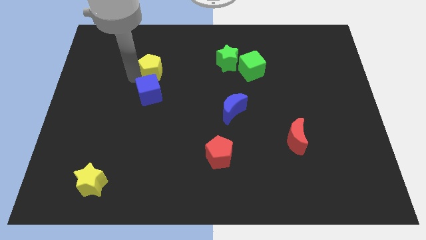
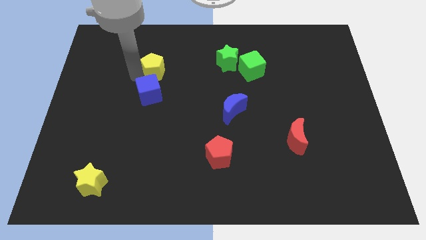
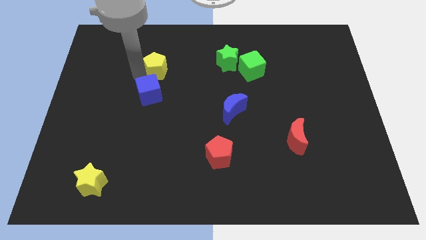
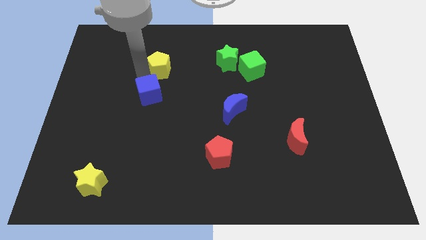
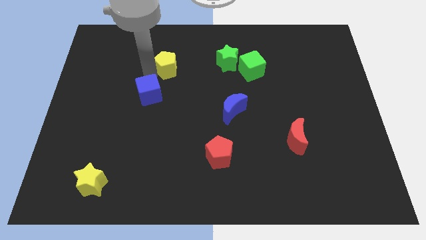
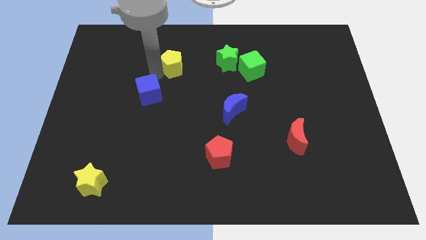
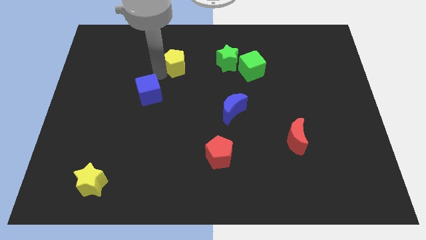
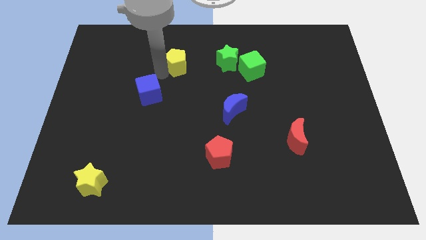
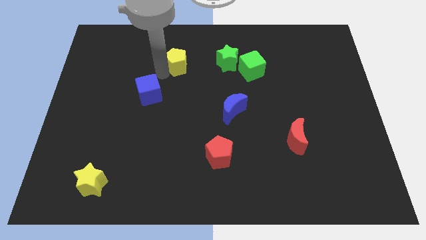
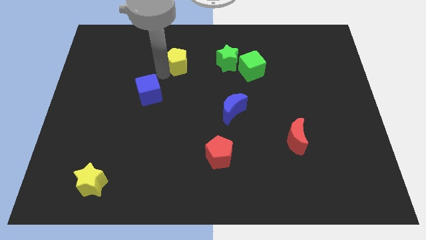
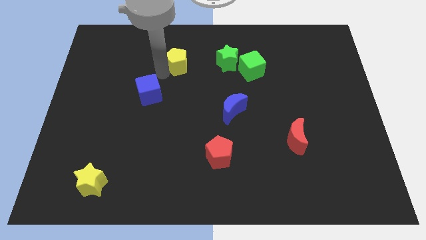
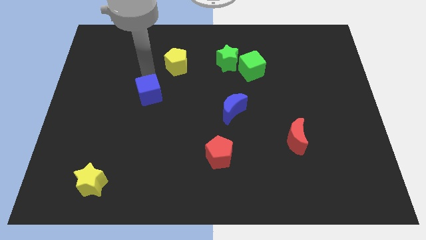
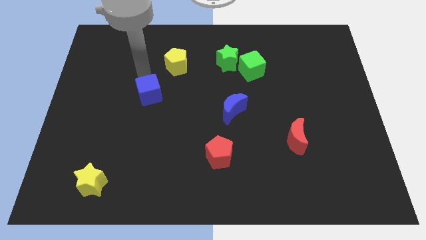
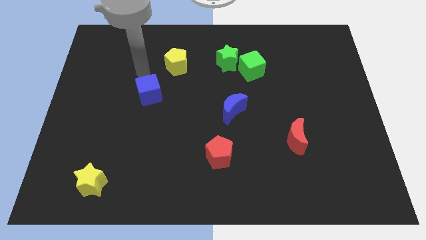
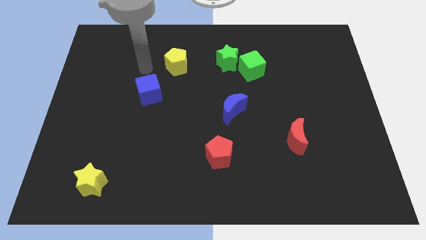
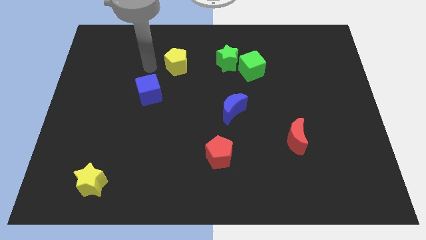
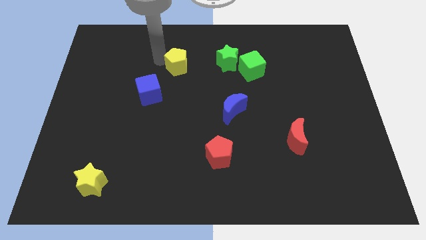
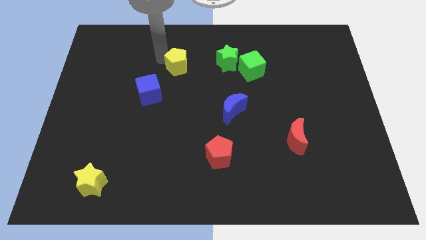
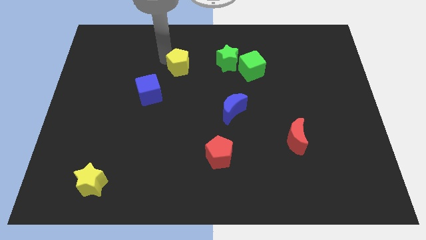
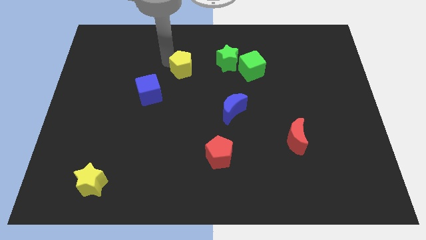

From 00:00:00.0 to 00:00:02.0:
push the yellow pentagon diagonal to the left the green star

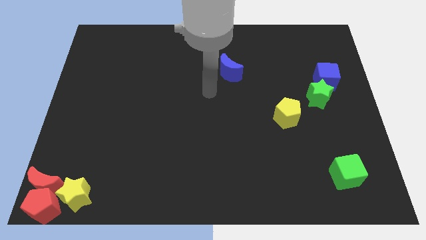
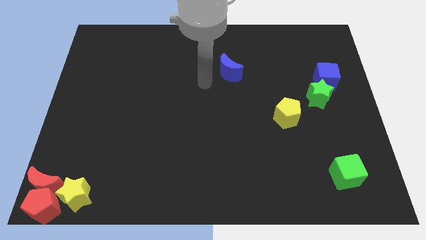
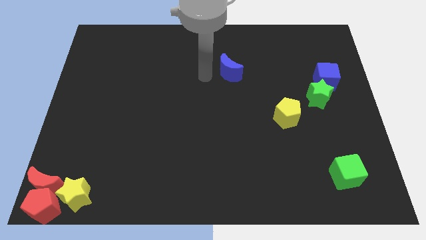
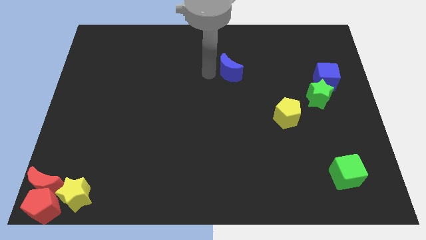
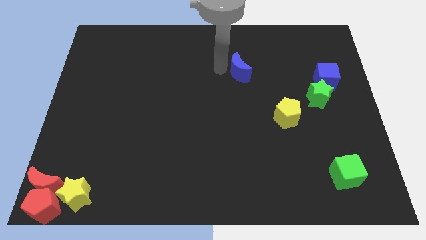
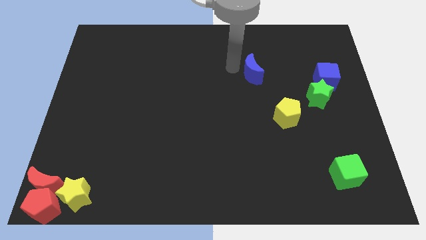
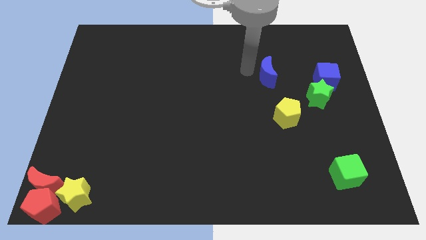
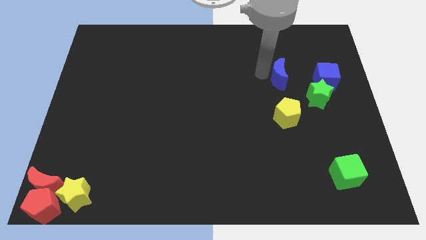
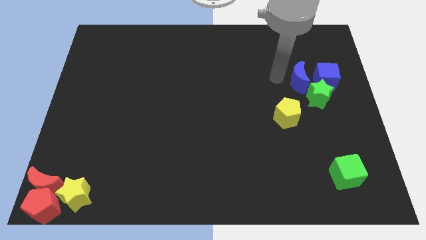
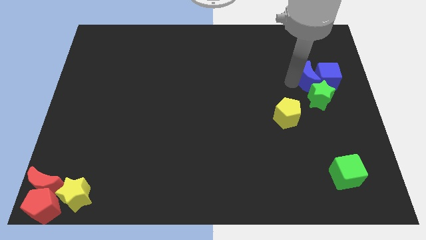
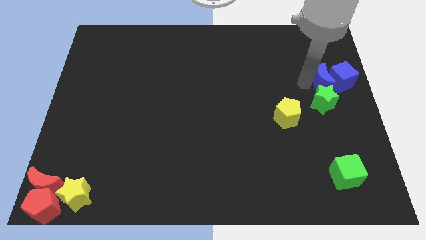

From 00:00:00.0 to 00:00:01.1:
push the blue moon into blue cube

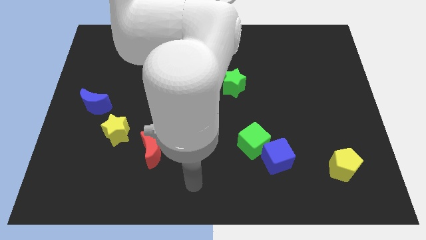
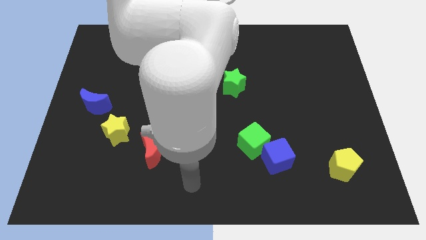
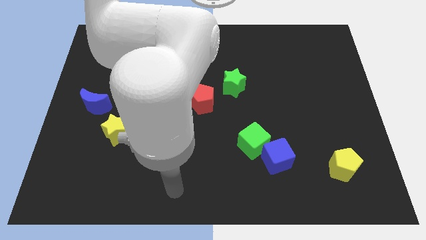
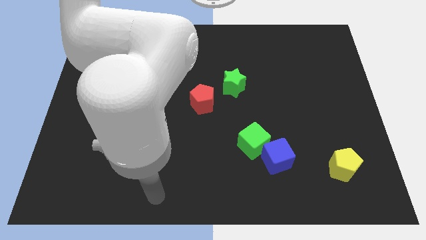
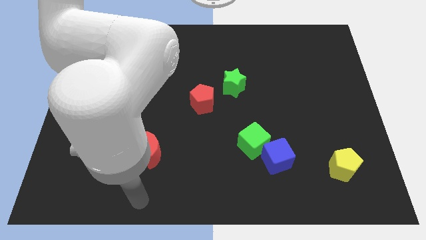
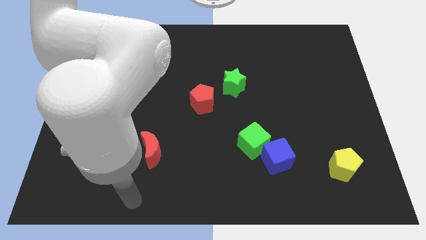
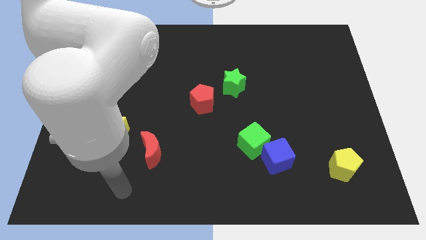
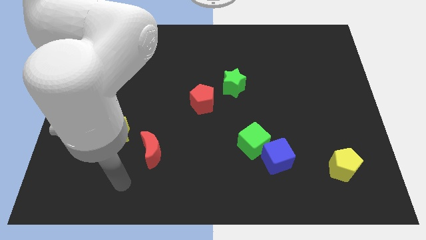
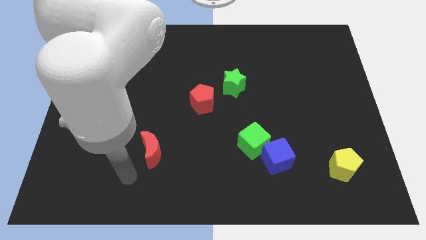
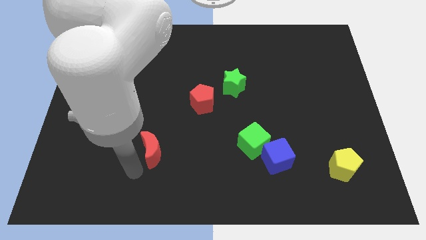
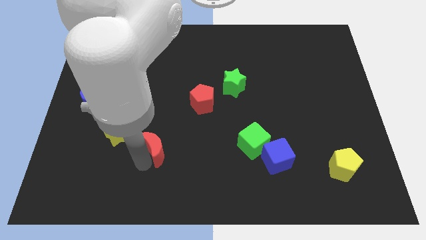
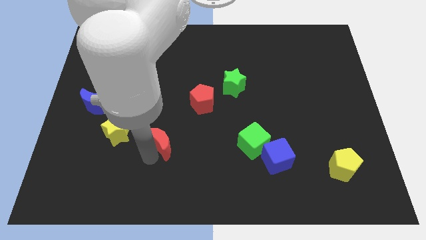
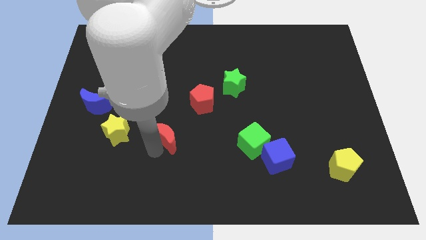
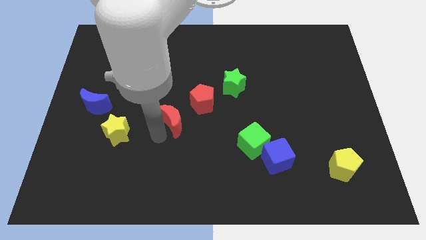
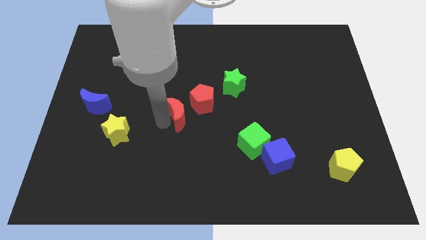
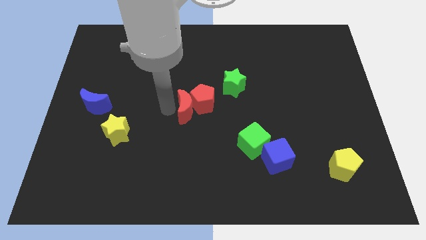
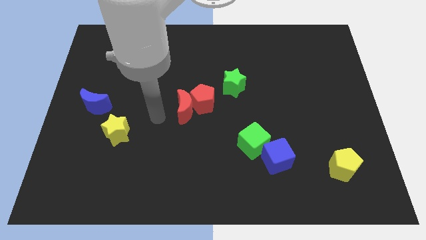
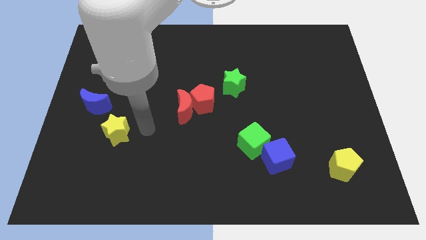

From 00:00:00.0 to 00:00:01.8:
move the red moon into the red pentagon

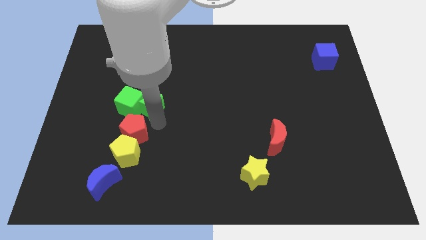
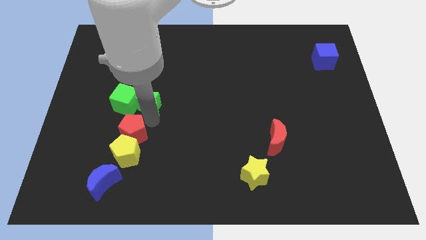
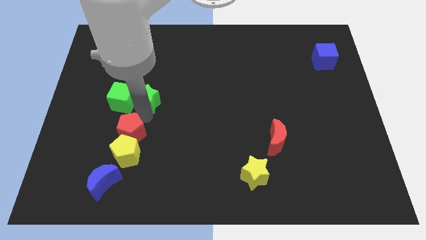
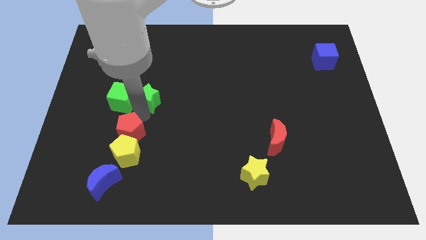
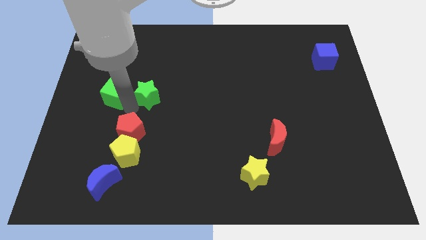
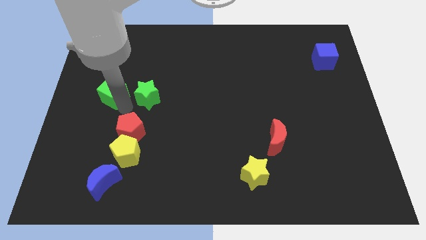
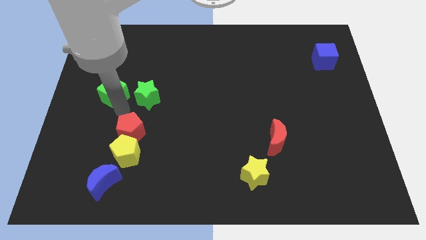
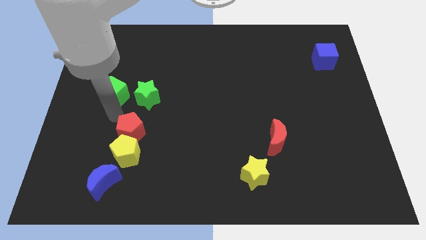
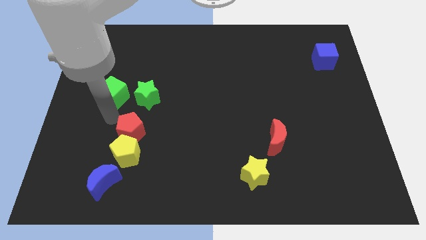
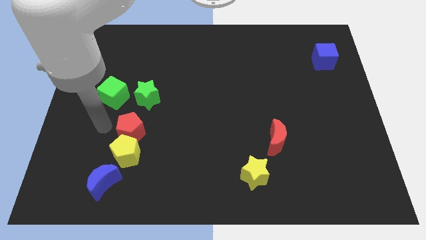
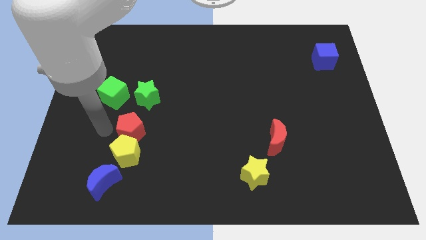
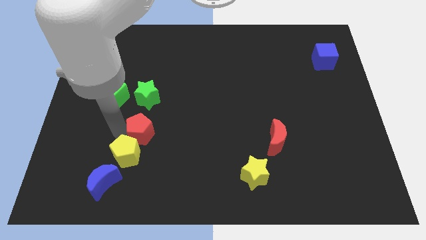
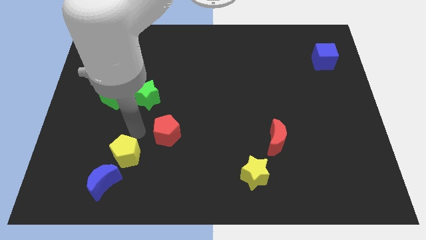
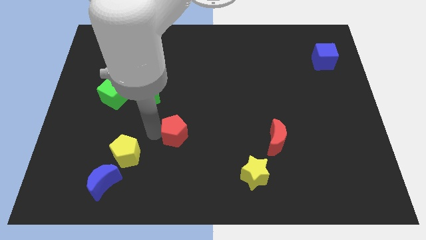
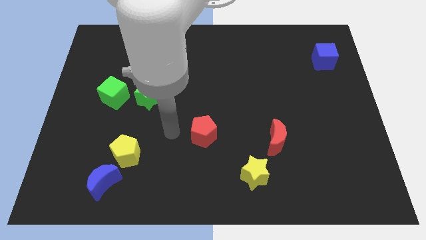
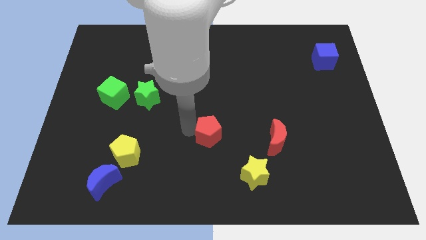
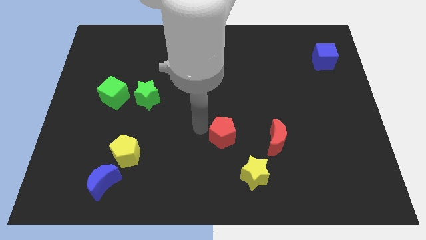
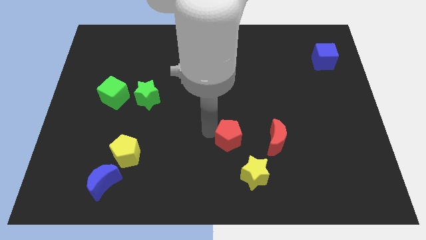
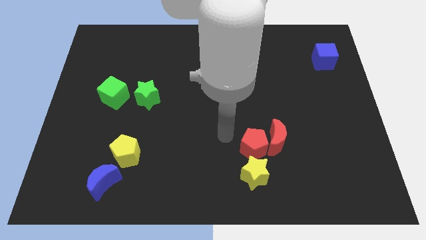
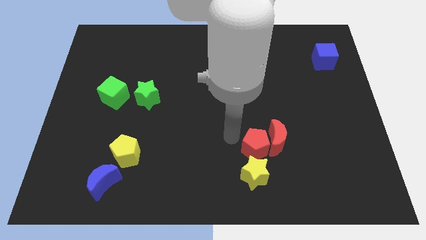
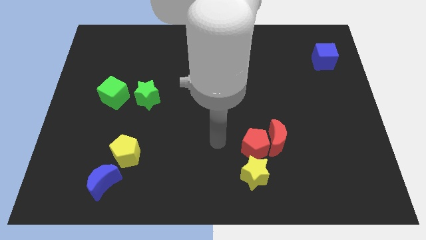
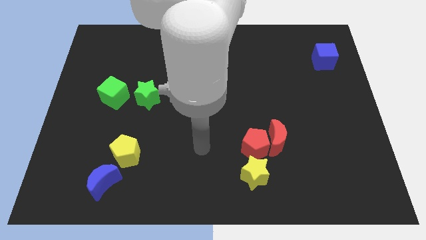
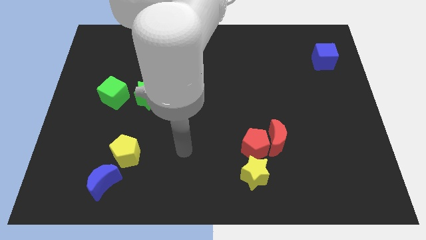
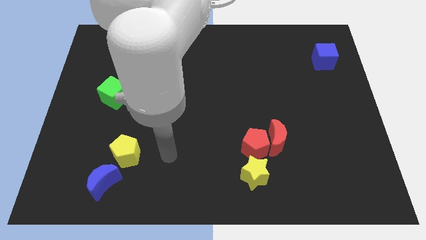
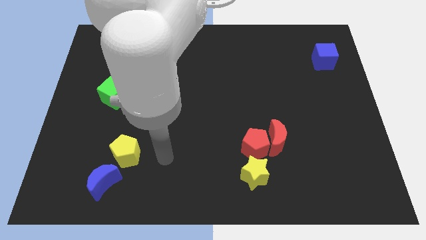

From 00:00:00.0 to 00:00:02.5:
separate red pentagon from green blocks

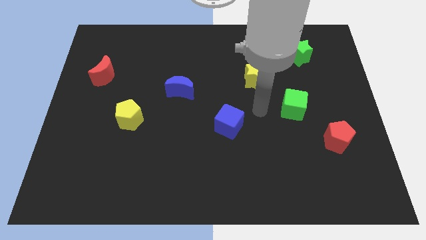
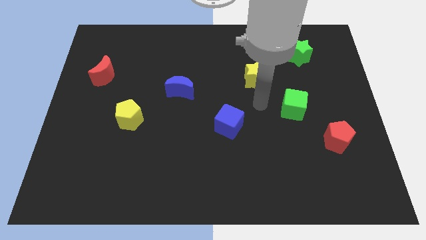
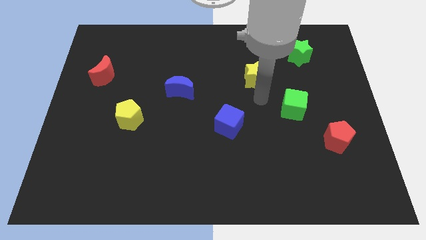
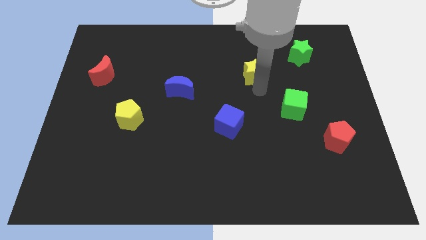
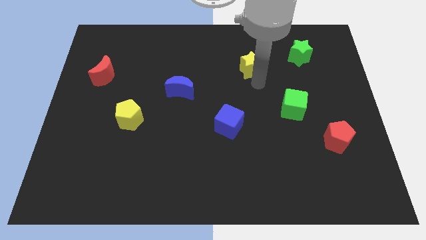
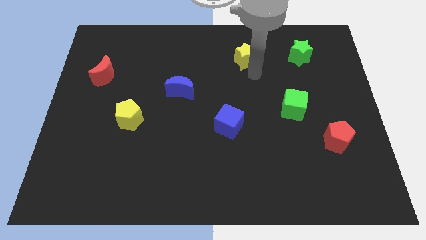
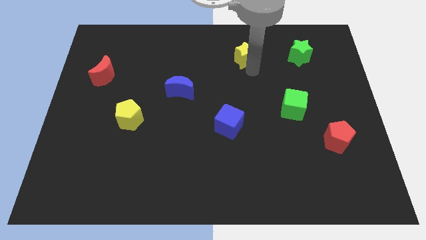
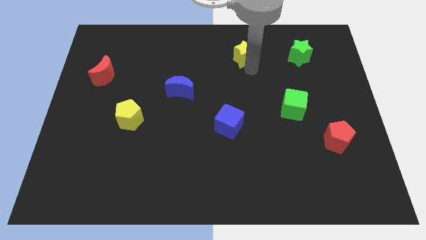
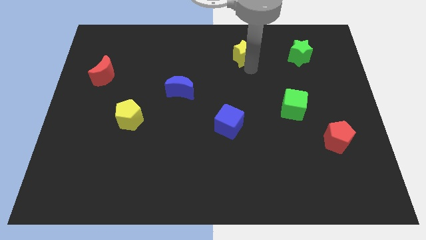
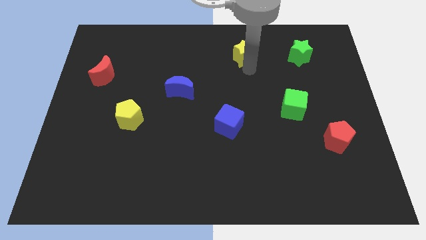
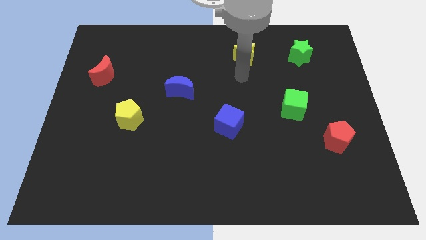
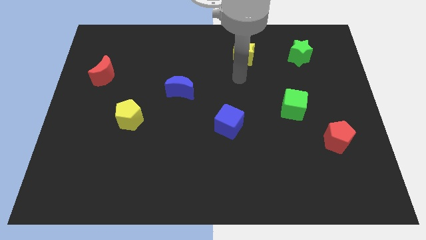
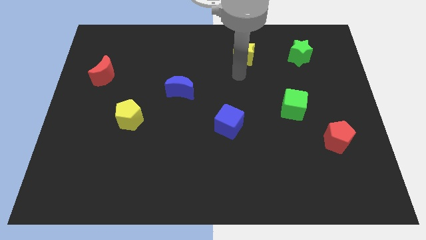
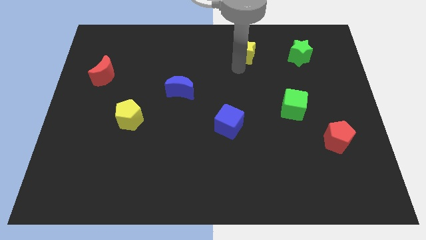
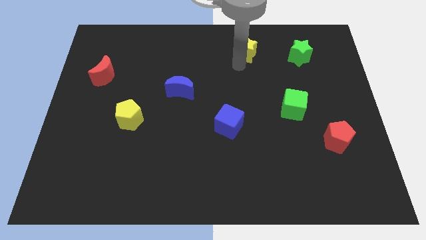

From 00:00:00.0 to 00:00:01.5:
place the yellow star left to the green star

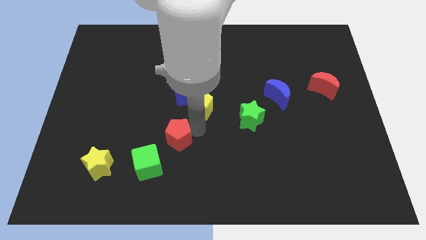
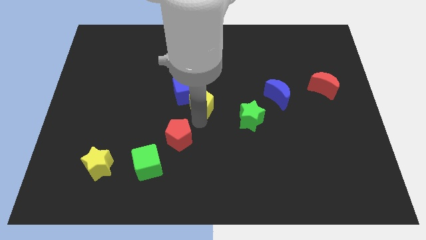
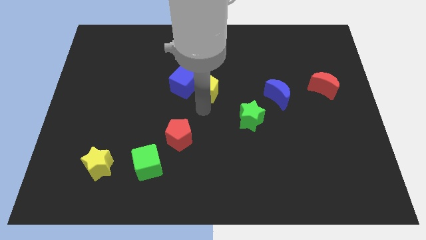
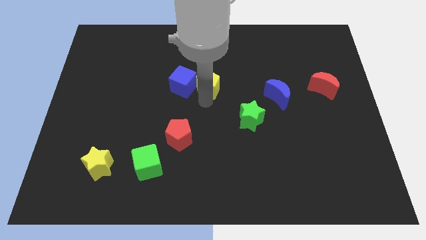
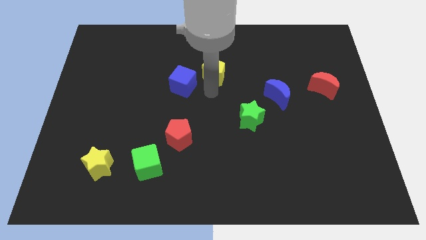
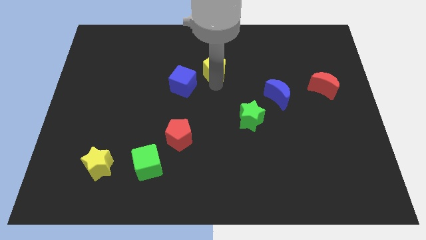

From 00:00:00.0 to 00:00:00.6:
separate the yellow pentagon from the blue cube
